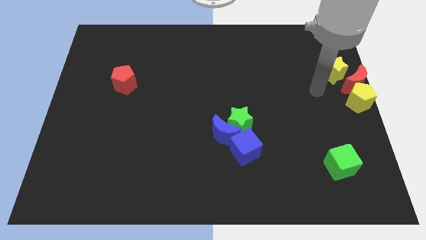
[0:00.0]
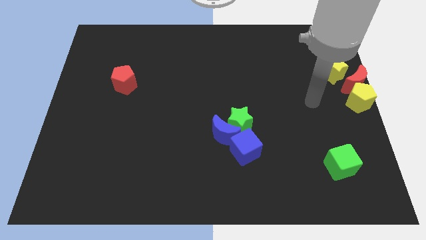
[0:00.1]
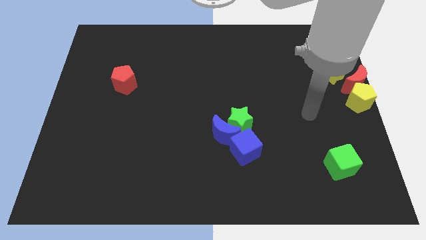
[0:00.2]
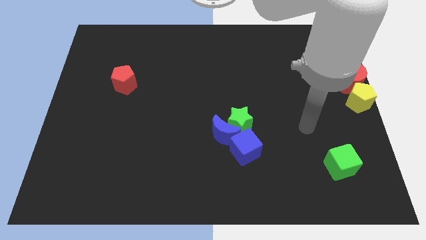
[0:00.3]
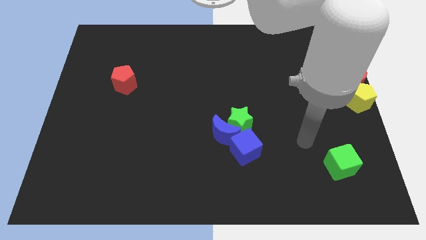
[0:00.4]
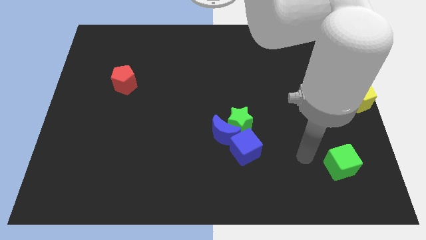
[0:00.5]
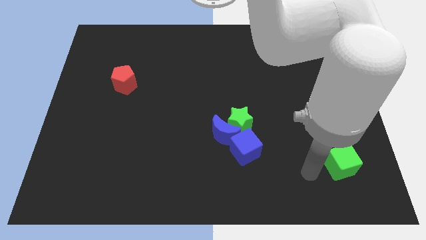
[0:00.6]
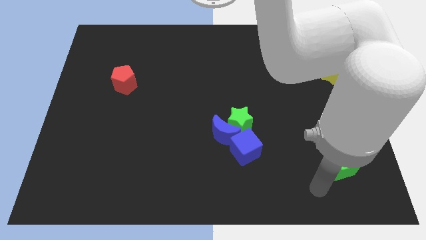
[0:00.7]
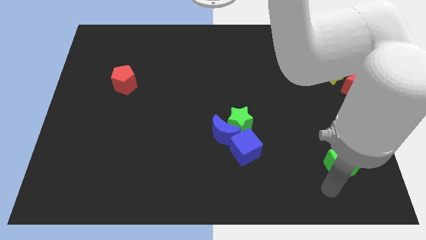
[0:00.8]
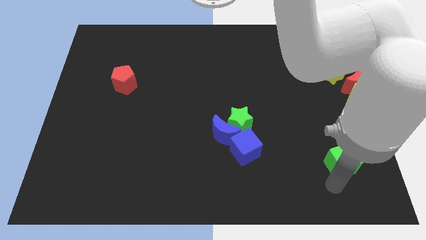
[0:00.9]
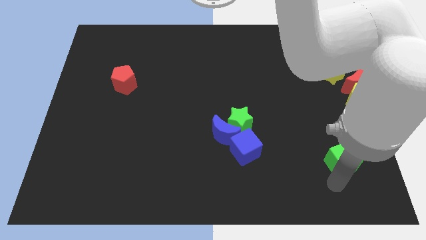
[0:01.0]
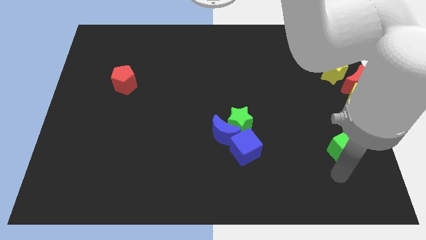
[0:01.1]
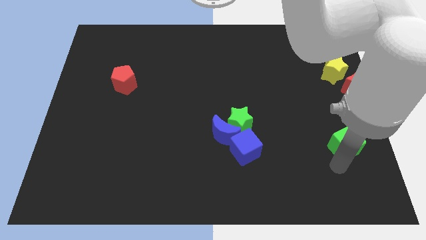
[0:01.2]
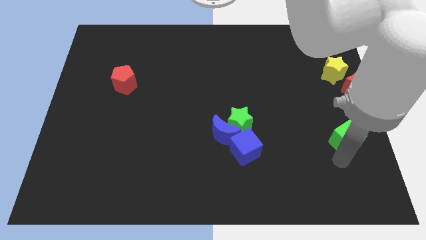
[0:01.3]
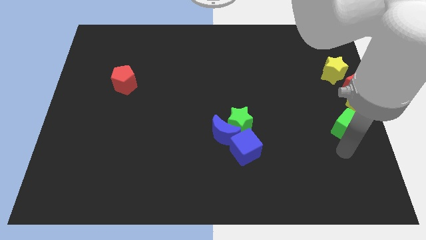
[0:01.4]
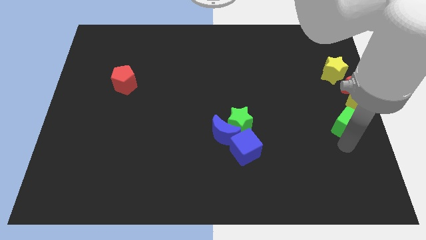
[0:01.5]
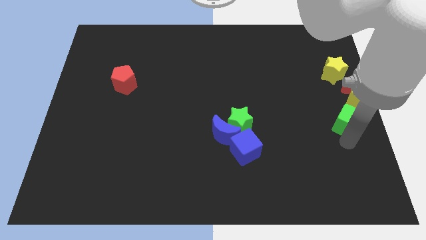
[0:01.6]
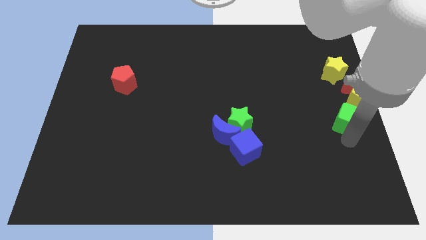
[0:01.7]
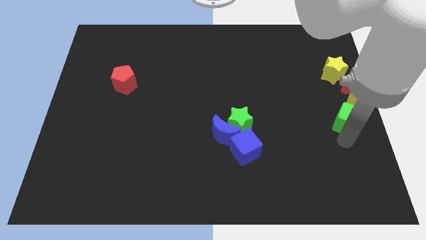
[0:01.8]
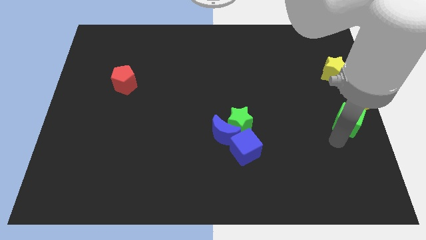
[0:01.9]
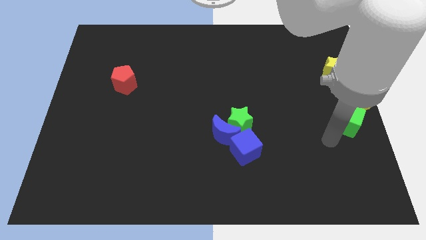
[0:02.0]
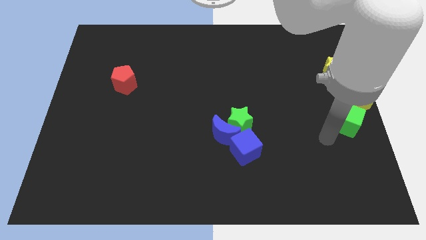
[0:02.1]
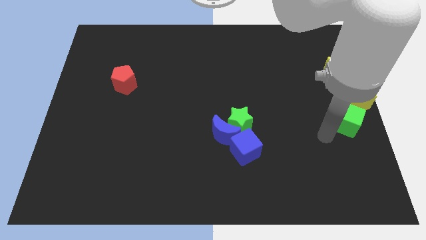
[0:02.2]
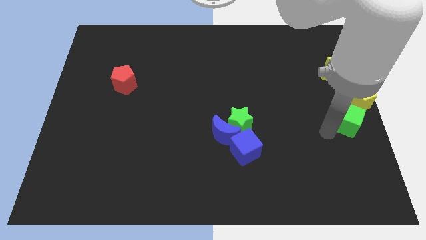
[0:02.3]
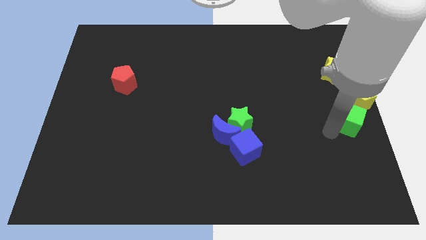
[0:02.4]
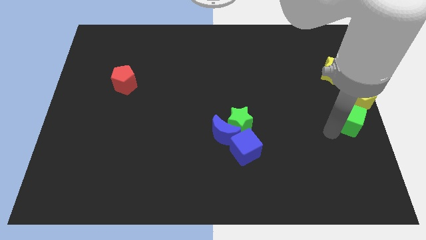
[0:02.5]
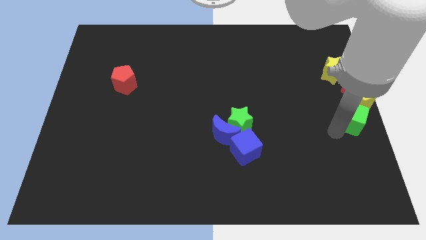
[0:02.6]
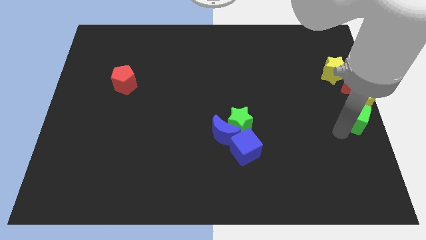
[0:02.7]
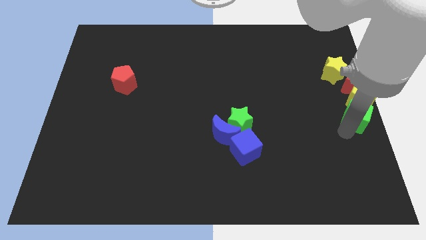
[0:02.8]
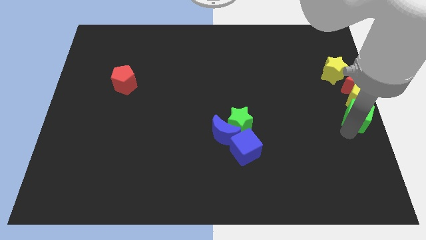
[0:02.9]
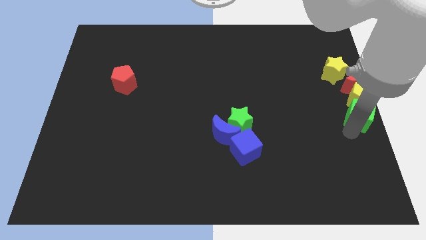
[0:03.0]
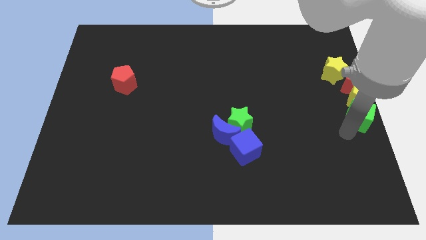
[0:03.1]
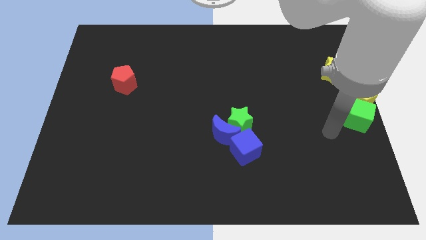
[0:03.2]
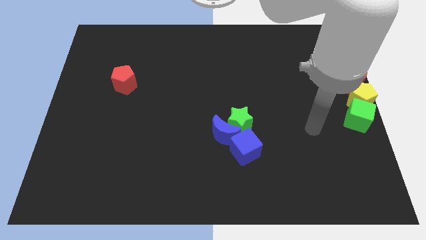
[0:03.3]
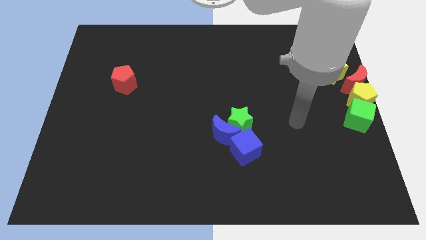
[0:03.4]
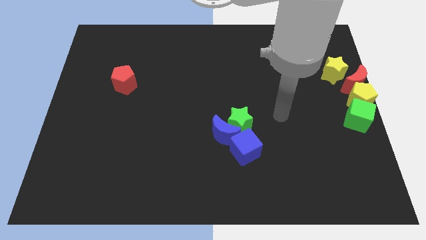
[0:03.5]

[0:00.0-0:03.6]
place green cube to the bottom of yellow pentagon

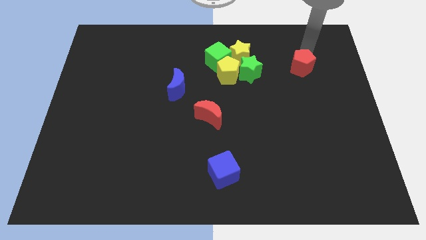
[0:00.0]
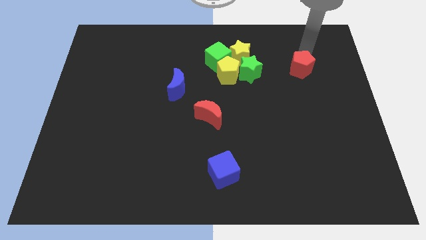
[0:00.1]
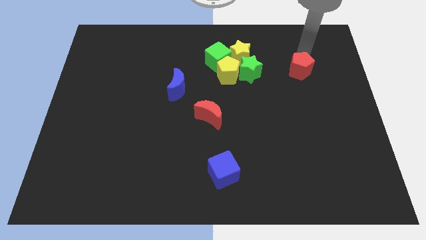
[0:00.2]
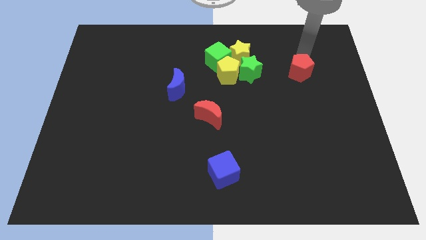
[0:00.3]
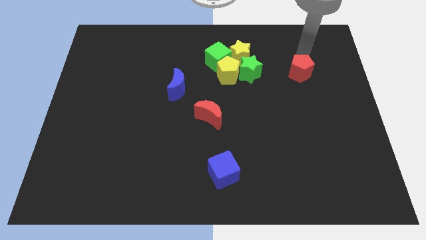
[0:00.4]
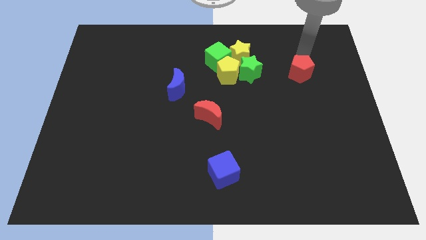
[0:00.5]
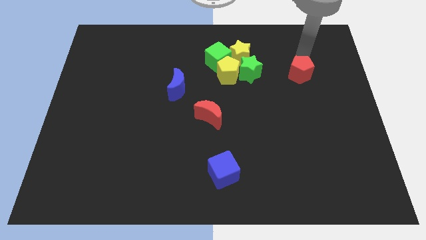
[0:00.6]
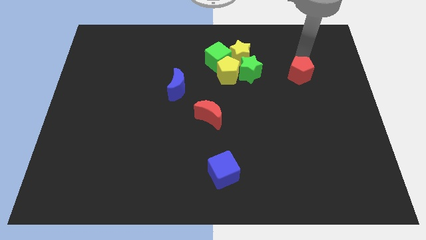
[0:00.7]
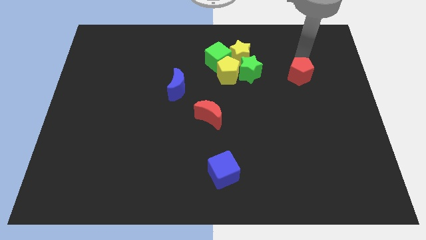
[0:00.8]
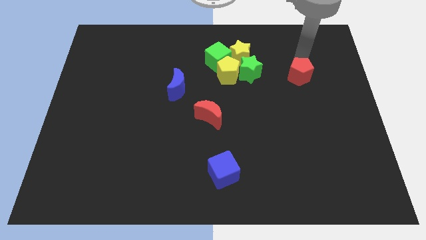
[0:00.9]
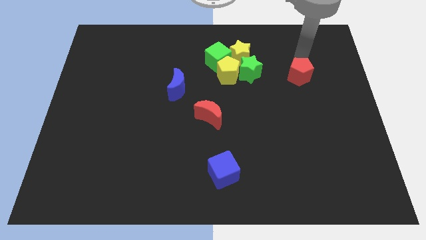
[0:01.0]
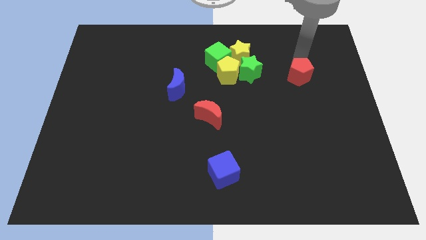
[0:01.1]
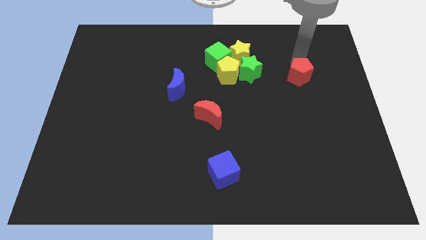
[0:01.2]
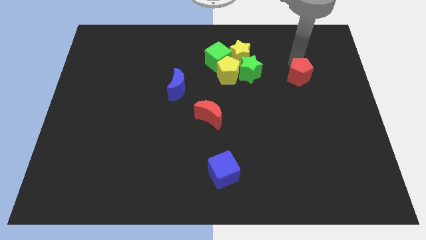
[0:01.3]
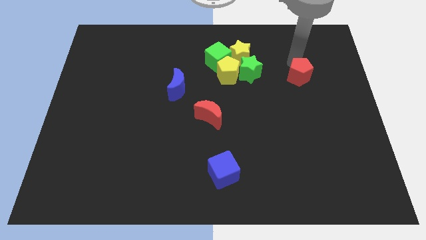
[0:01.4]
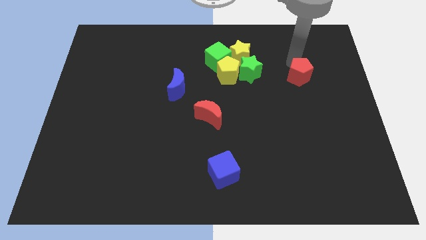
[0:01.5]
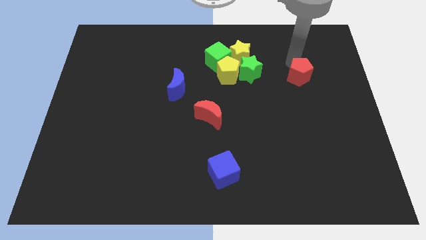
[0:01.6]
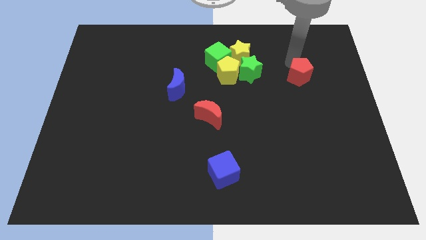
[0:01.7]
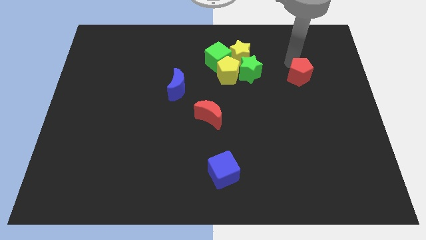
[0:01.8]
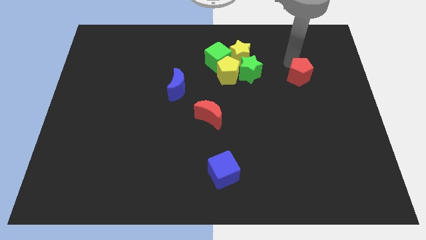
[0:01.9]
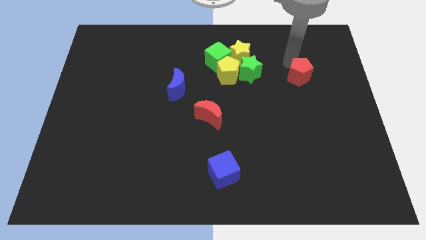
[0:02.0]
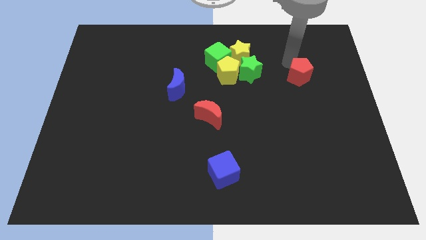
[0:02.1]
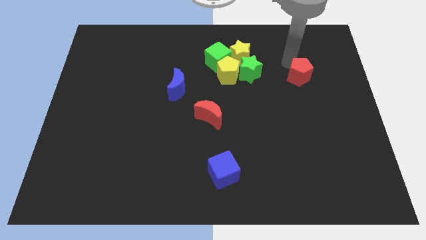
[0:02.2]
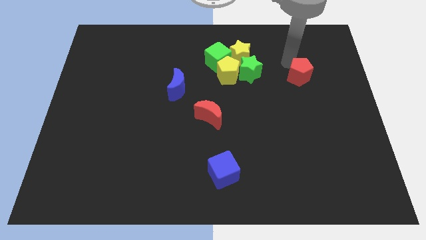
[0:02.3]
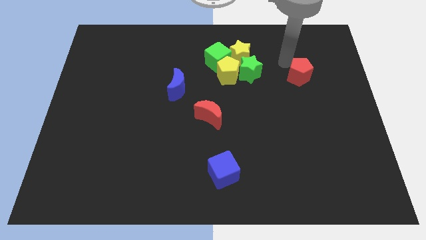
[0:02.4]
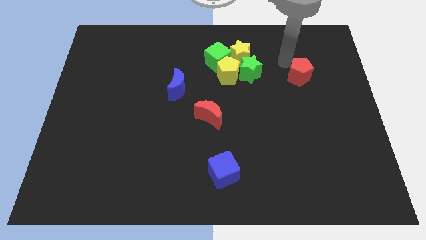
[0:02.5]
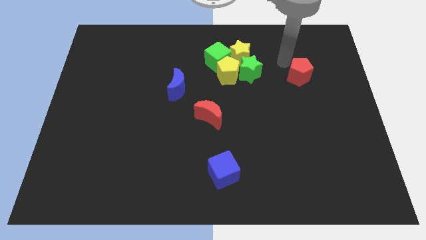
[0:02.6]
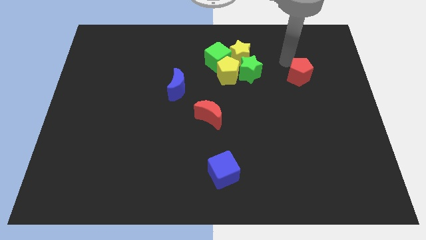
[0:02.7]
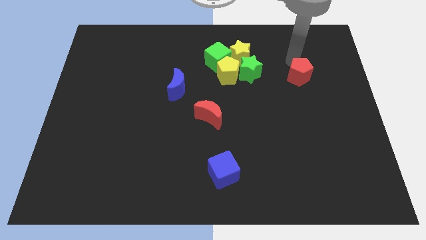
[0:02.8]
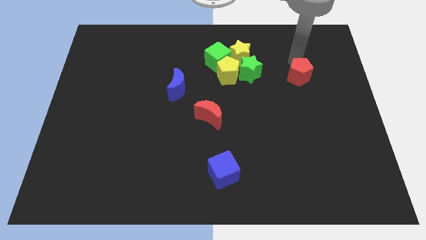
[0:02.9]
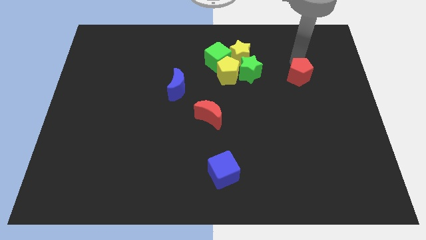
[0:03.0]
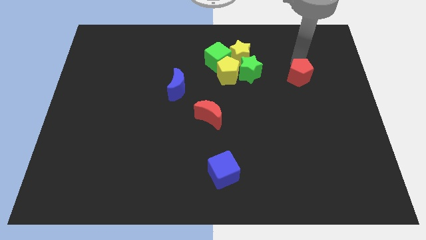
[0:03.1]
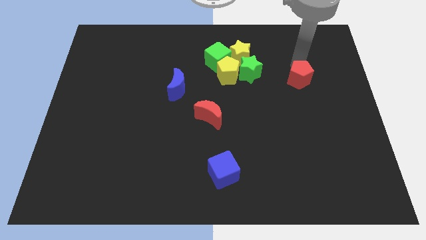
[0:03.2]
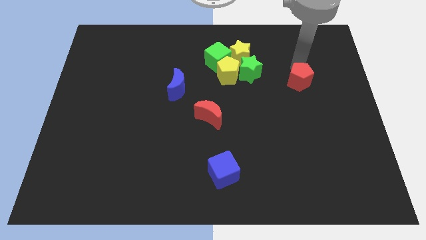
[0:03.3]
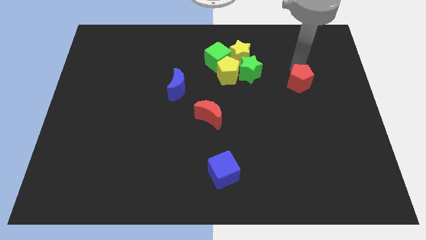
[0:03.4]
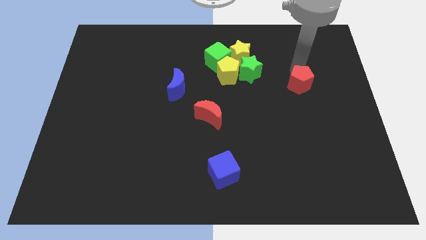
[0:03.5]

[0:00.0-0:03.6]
push the red pentagon diagonally bottom right of the green star

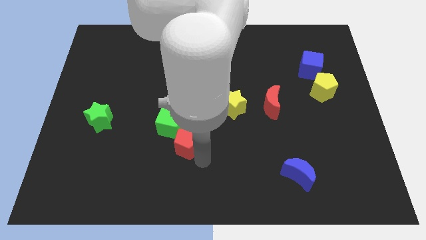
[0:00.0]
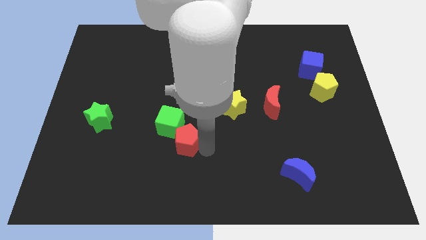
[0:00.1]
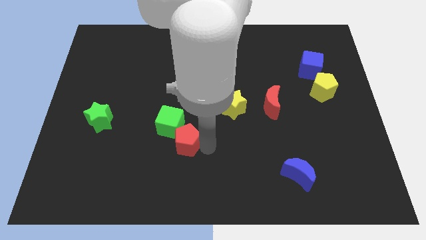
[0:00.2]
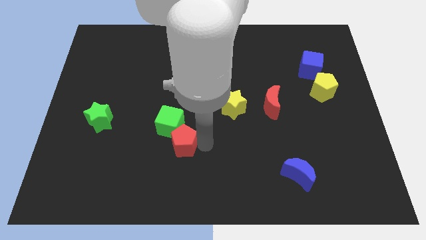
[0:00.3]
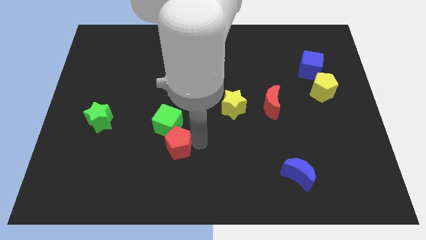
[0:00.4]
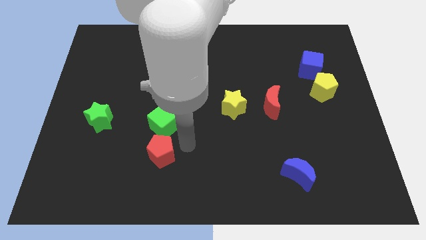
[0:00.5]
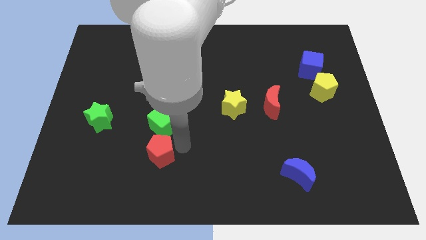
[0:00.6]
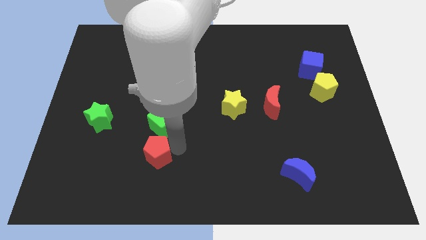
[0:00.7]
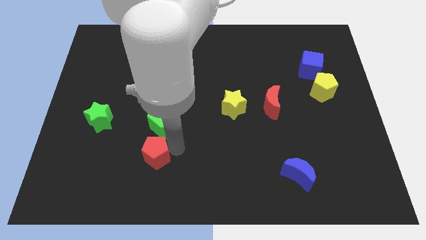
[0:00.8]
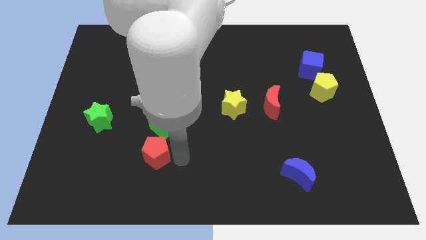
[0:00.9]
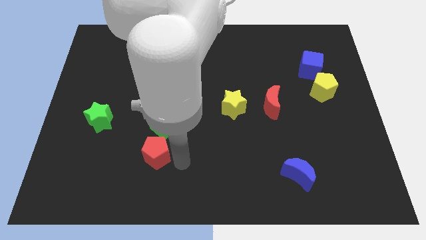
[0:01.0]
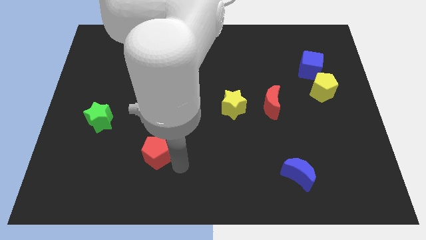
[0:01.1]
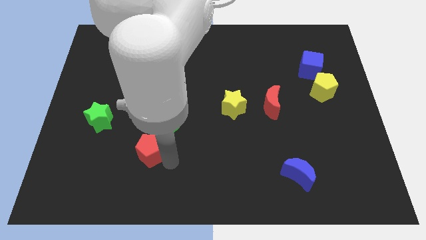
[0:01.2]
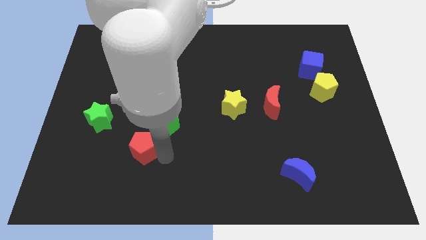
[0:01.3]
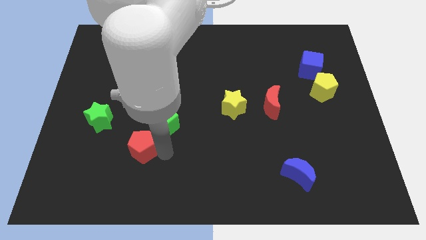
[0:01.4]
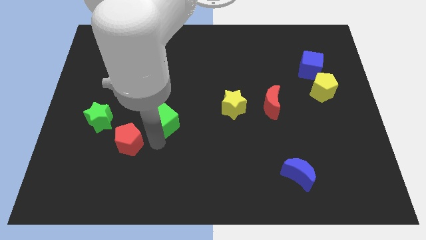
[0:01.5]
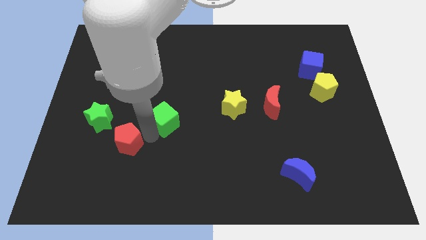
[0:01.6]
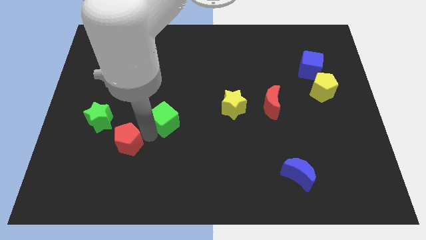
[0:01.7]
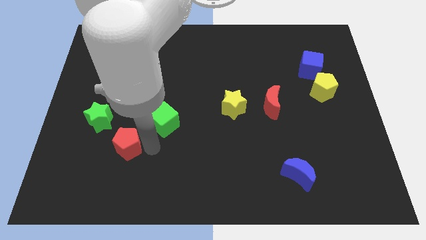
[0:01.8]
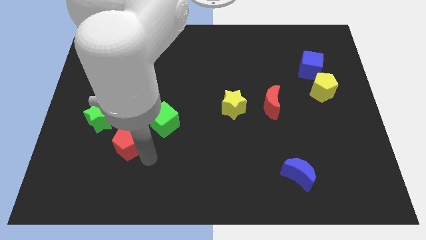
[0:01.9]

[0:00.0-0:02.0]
separate red pentagon from the green cube
